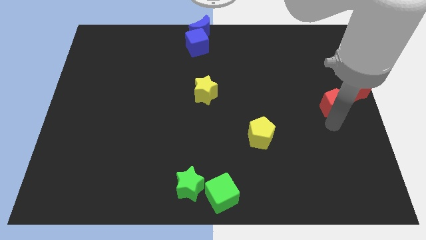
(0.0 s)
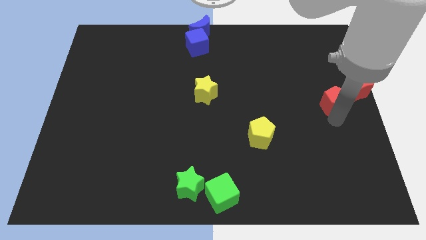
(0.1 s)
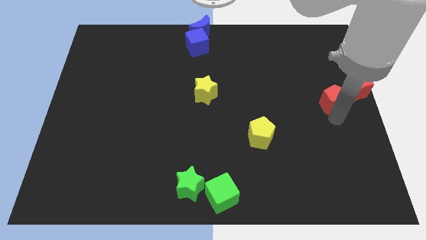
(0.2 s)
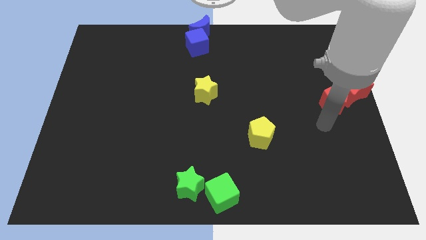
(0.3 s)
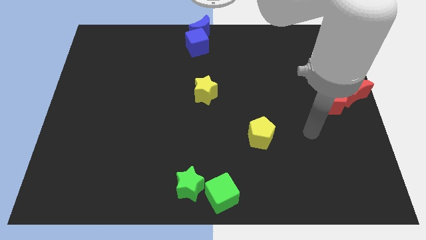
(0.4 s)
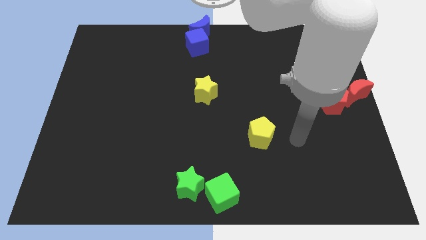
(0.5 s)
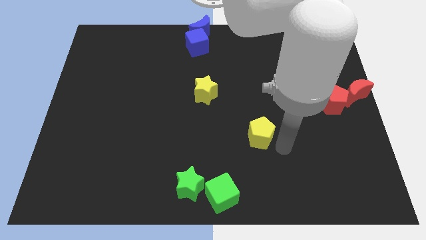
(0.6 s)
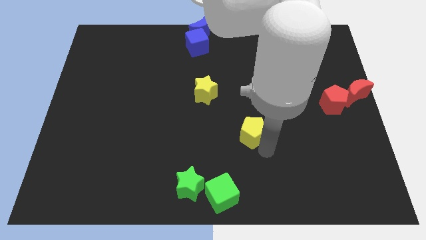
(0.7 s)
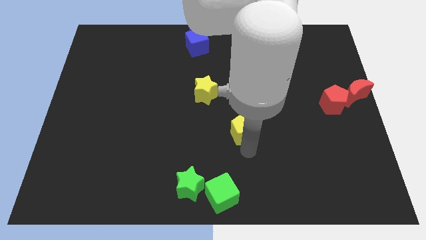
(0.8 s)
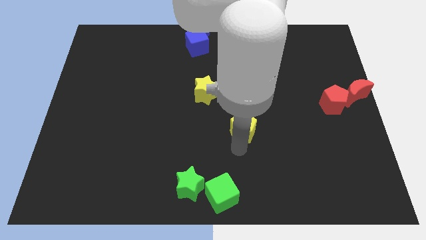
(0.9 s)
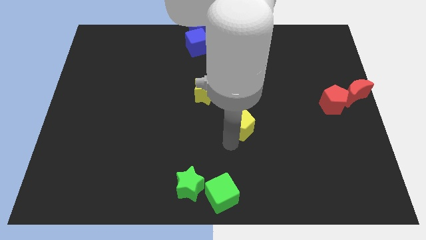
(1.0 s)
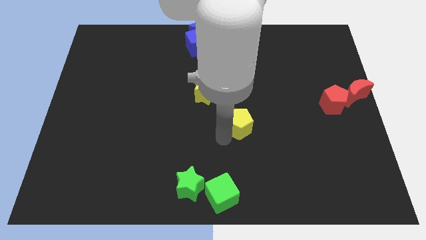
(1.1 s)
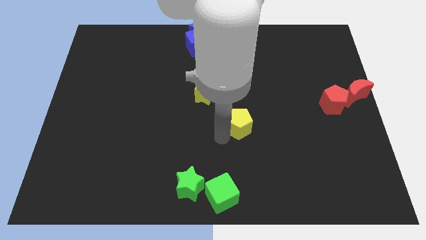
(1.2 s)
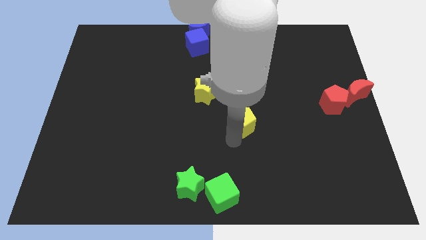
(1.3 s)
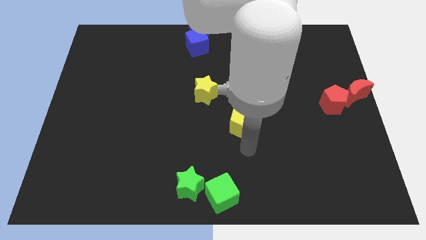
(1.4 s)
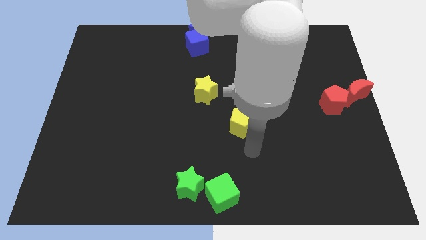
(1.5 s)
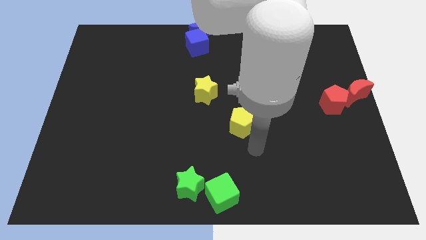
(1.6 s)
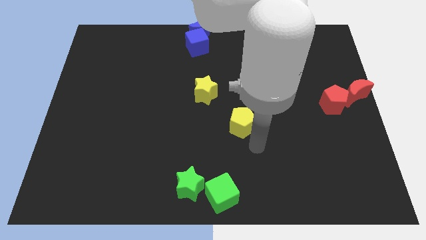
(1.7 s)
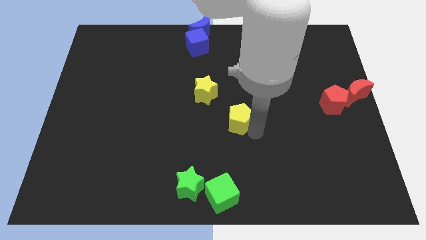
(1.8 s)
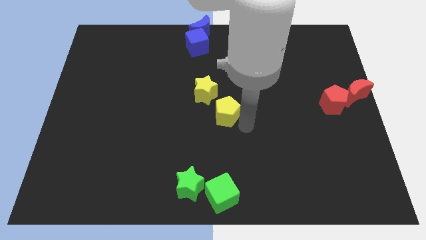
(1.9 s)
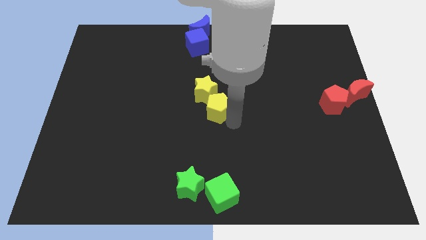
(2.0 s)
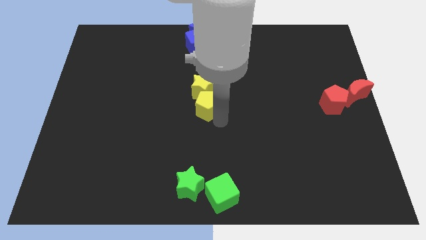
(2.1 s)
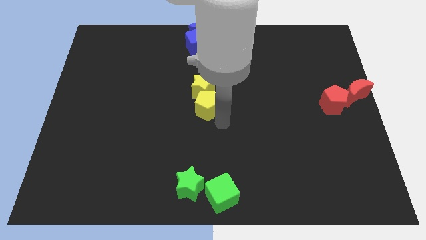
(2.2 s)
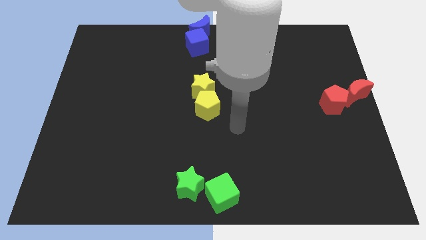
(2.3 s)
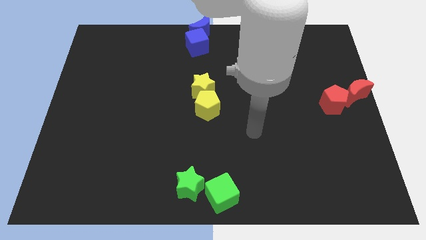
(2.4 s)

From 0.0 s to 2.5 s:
push the yellow pentagon into the yellow star

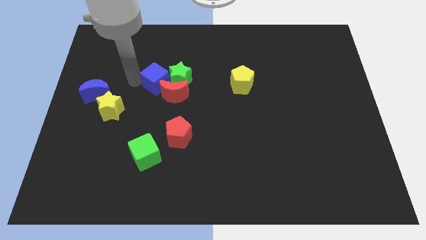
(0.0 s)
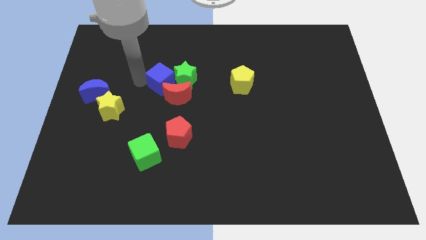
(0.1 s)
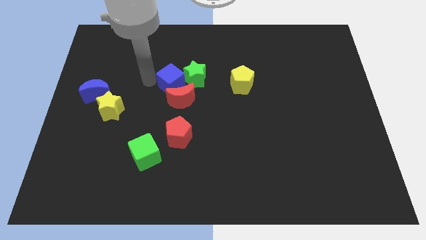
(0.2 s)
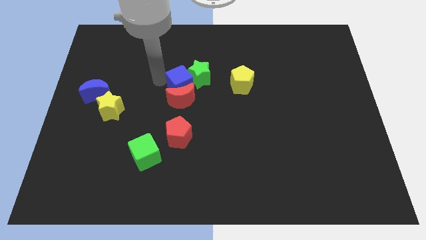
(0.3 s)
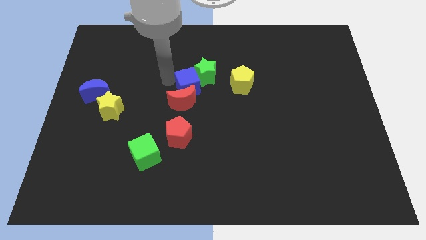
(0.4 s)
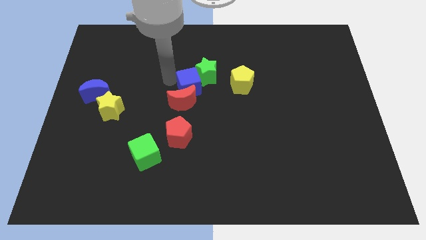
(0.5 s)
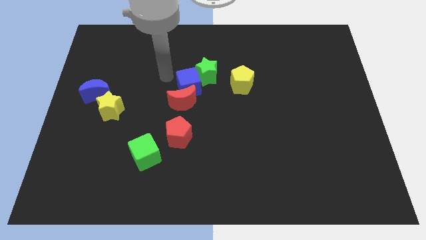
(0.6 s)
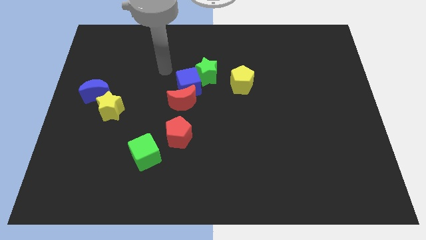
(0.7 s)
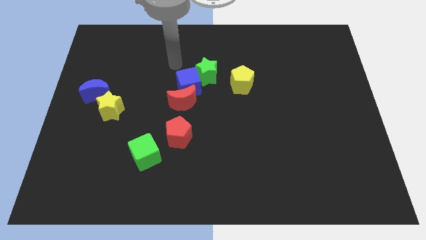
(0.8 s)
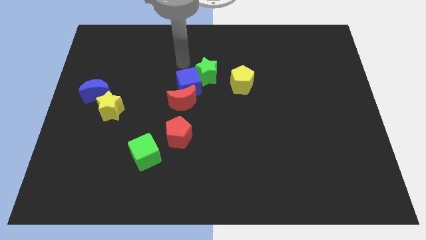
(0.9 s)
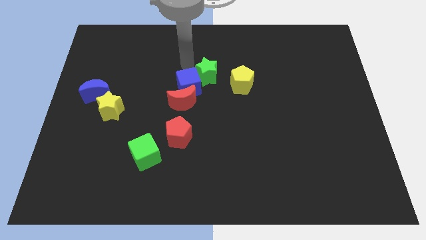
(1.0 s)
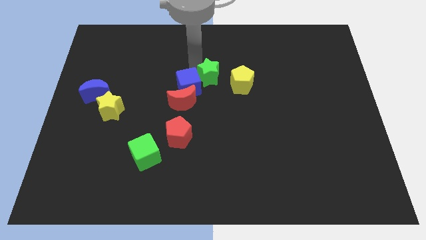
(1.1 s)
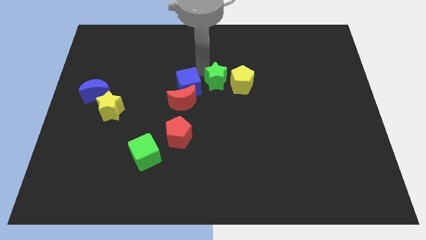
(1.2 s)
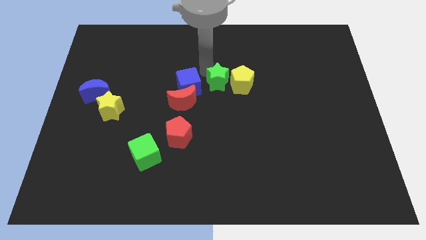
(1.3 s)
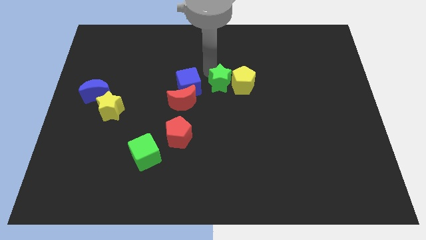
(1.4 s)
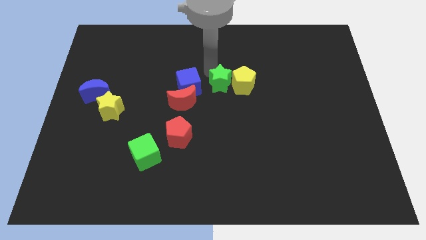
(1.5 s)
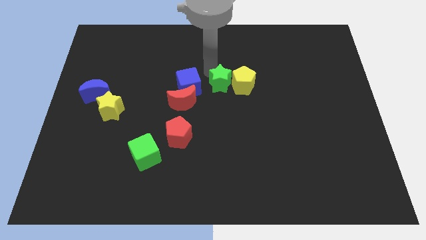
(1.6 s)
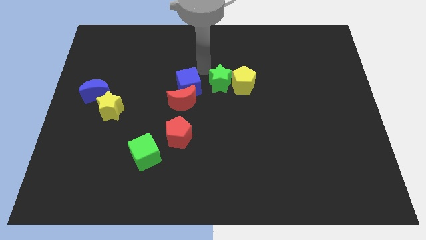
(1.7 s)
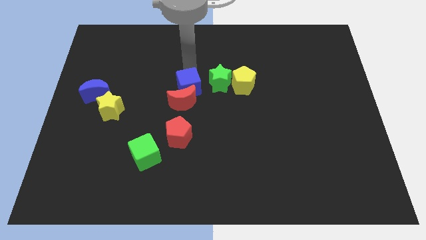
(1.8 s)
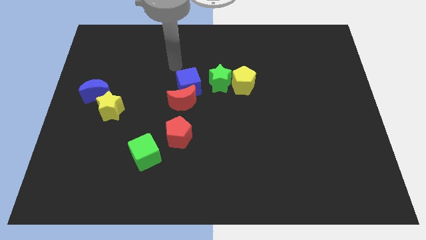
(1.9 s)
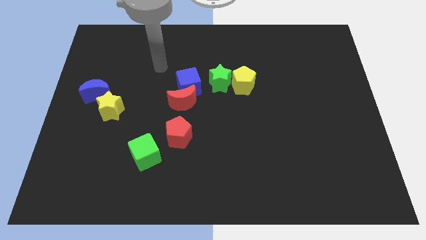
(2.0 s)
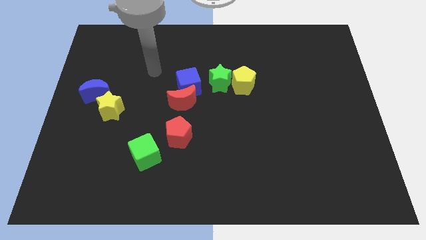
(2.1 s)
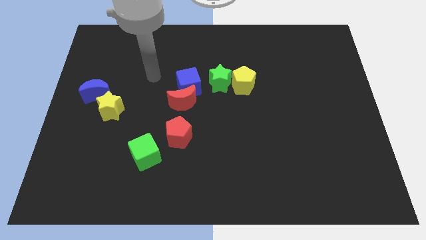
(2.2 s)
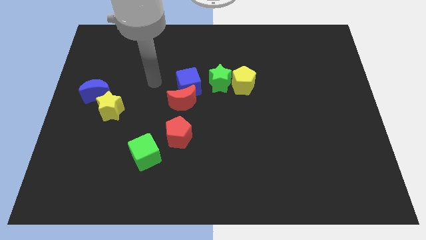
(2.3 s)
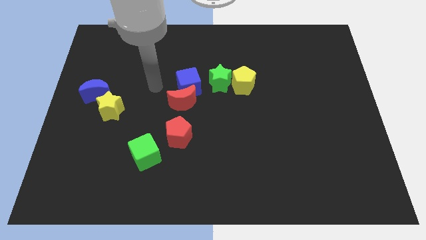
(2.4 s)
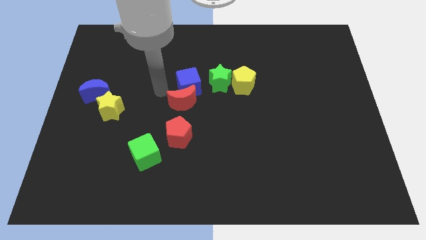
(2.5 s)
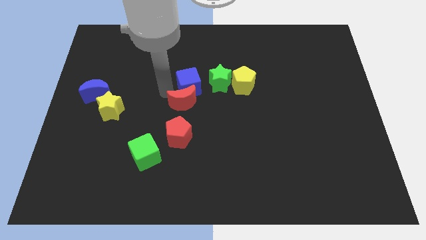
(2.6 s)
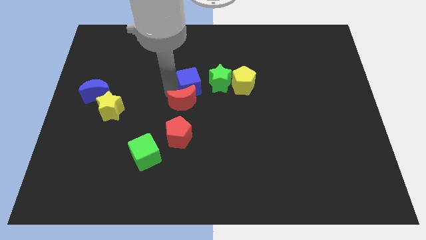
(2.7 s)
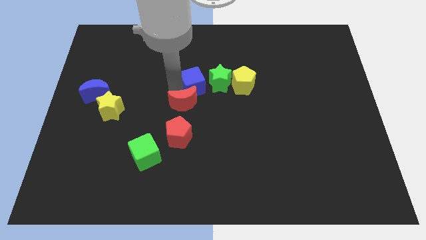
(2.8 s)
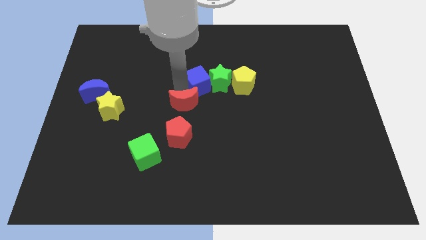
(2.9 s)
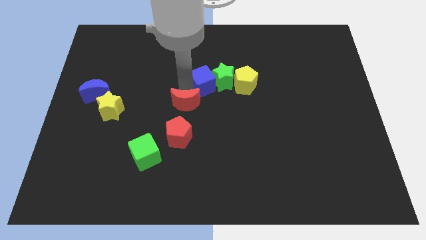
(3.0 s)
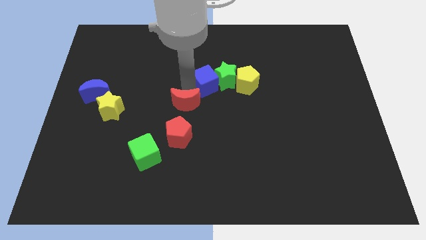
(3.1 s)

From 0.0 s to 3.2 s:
push the blue cube into the green star

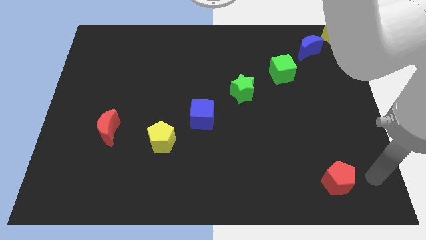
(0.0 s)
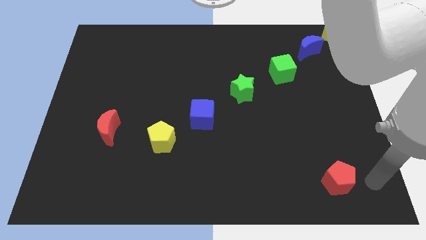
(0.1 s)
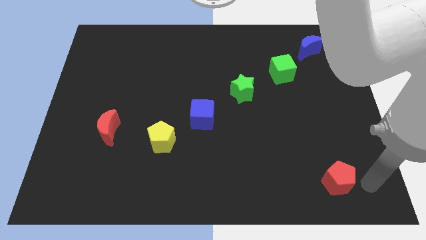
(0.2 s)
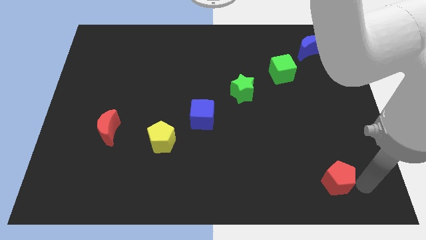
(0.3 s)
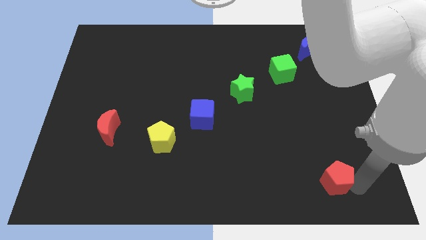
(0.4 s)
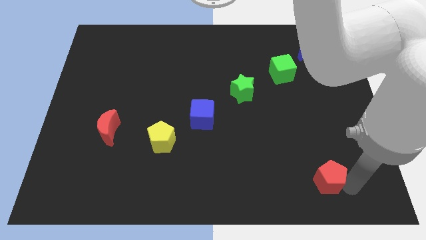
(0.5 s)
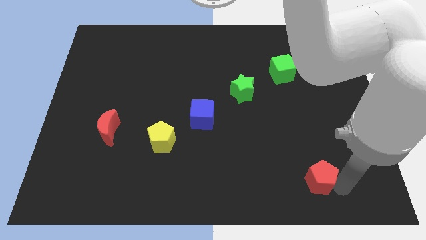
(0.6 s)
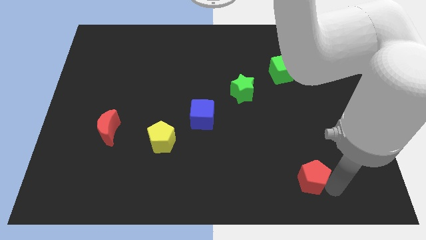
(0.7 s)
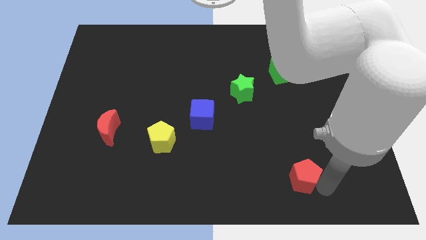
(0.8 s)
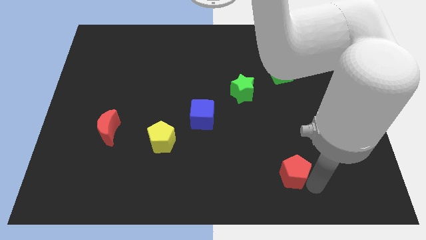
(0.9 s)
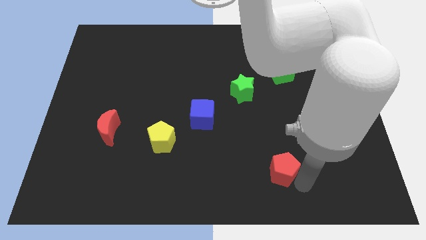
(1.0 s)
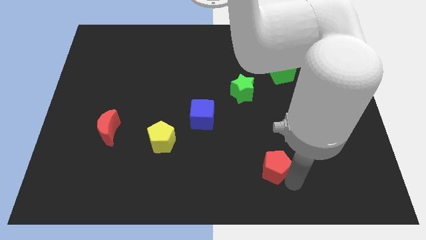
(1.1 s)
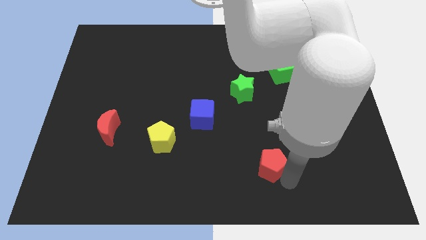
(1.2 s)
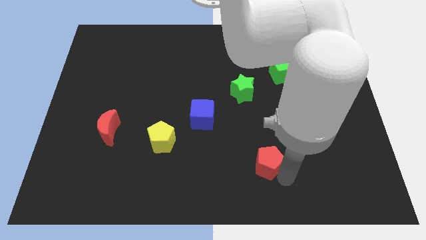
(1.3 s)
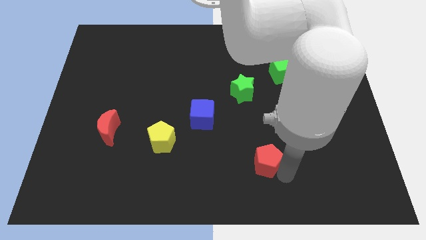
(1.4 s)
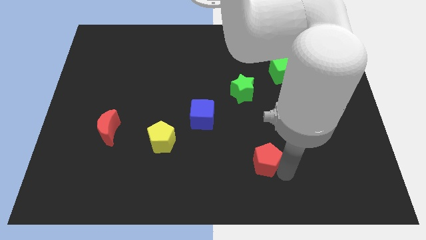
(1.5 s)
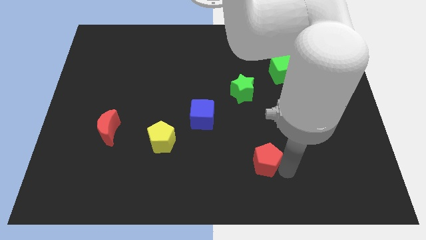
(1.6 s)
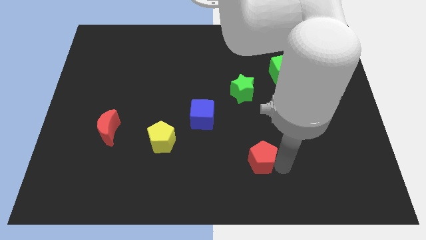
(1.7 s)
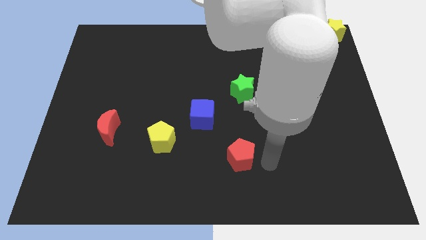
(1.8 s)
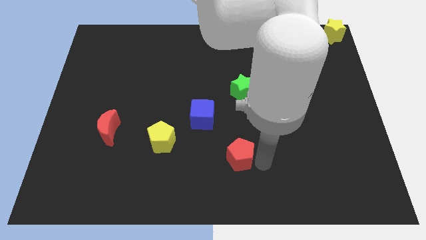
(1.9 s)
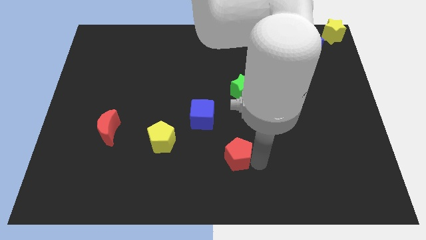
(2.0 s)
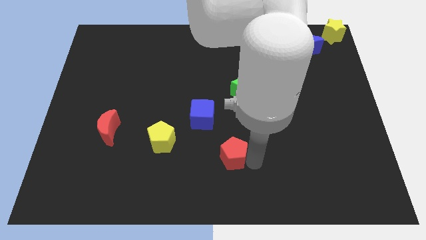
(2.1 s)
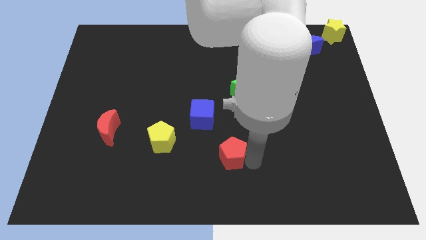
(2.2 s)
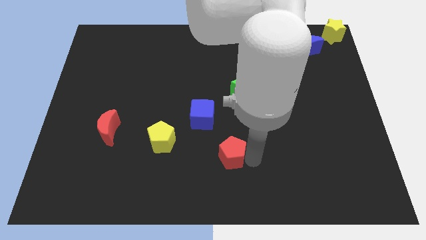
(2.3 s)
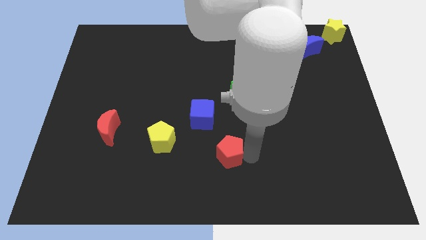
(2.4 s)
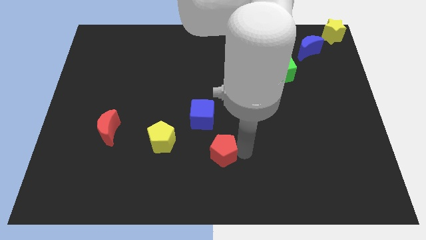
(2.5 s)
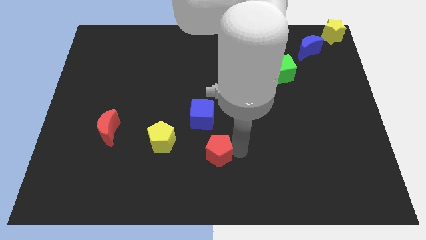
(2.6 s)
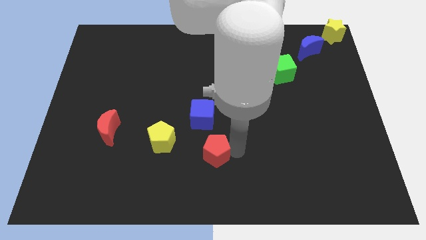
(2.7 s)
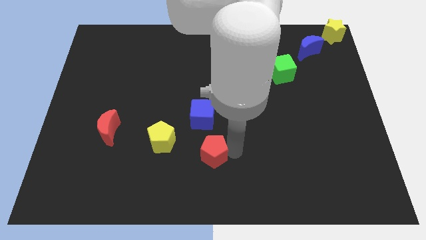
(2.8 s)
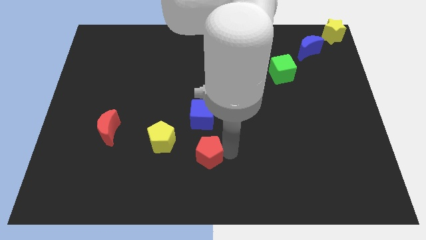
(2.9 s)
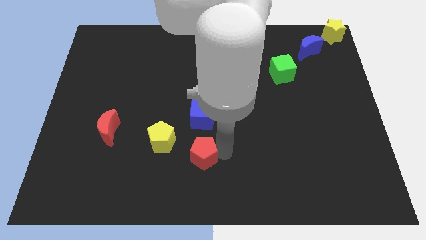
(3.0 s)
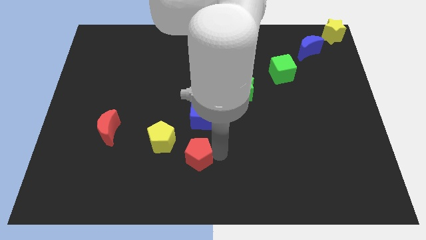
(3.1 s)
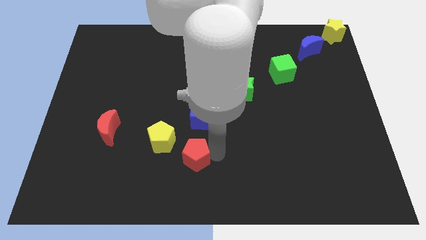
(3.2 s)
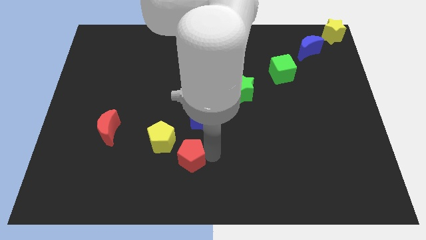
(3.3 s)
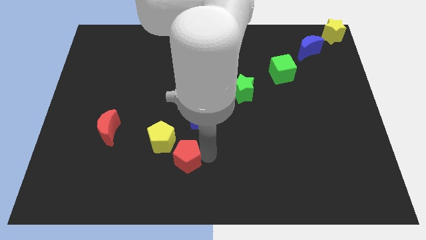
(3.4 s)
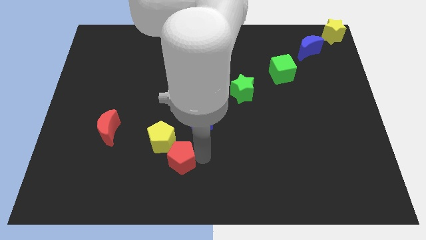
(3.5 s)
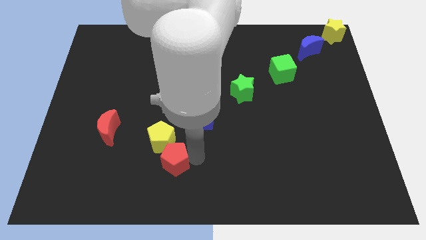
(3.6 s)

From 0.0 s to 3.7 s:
push red pentagon to the bottom right side of the yellow pentagon
